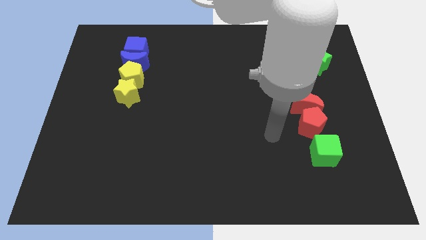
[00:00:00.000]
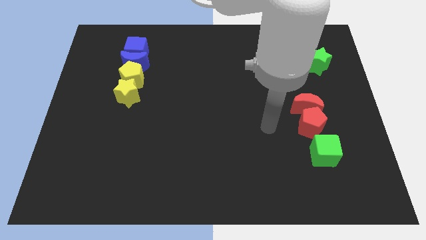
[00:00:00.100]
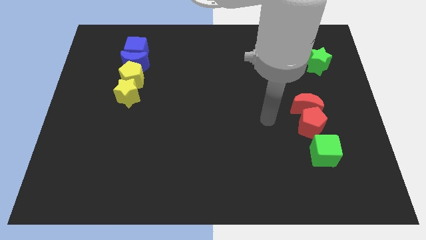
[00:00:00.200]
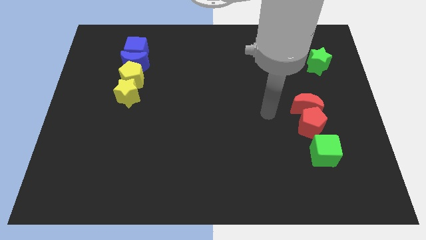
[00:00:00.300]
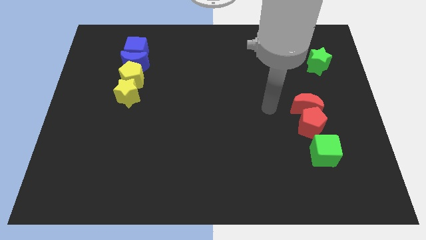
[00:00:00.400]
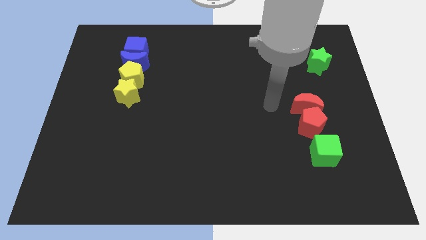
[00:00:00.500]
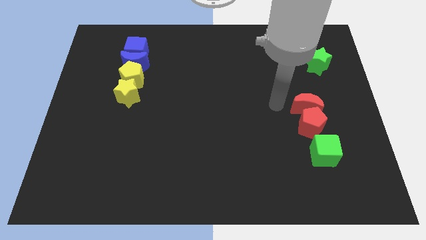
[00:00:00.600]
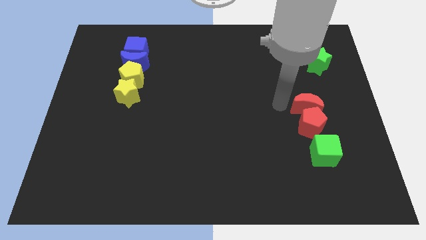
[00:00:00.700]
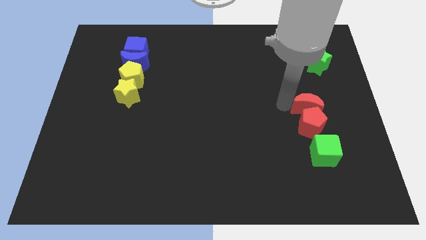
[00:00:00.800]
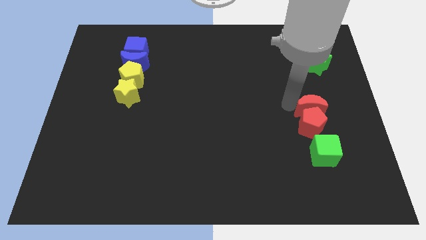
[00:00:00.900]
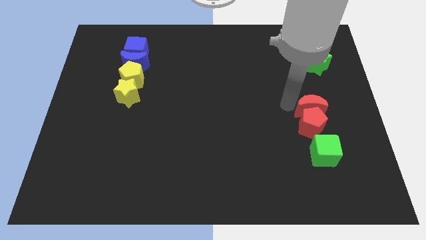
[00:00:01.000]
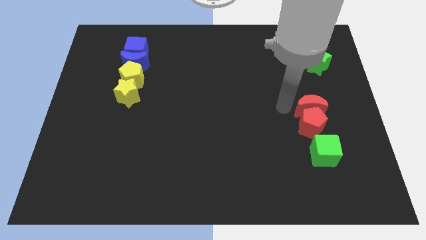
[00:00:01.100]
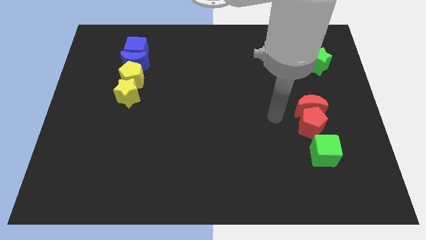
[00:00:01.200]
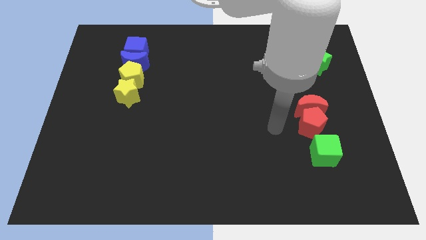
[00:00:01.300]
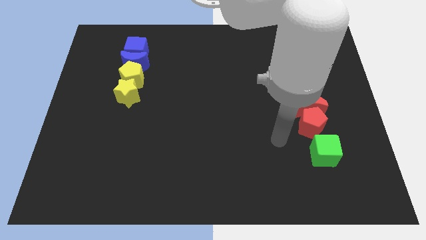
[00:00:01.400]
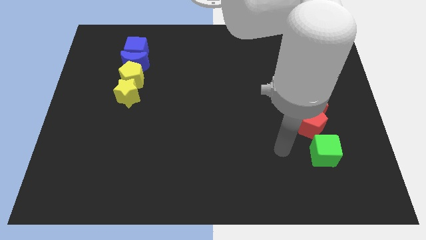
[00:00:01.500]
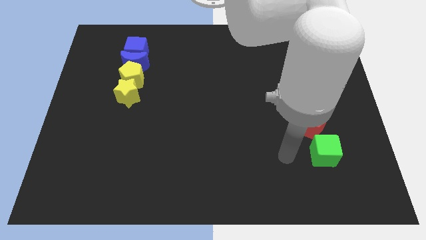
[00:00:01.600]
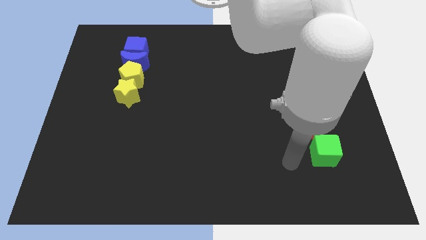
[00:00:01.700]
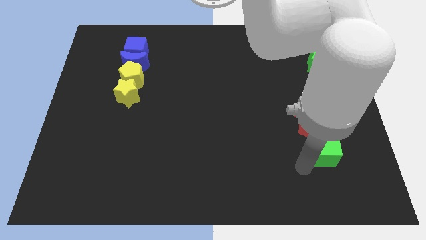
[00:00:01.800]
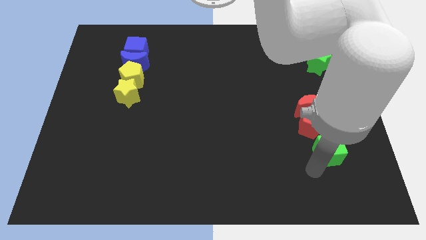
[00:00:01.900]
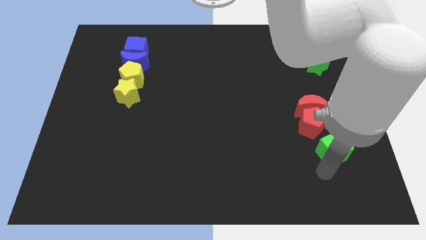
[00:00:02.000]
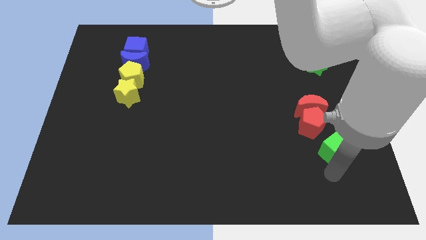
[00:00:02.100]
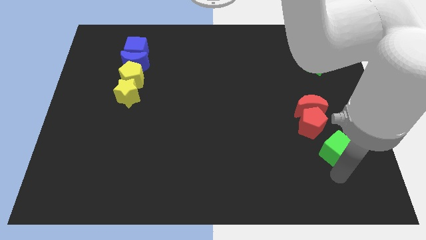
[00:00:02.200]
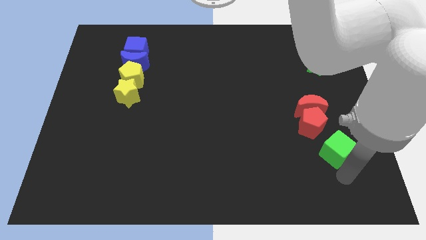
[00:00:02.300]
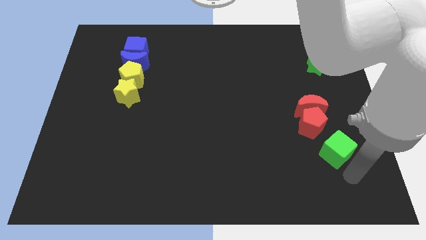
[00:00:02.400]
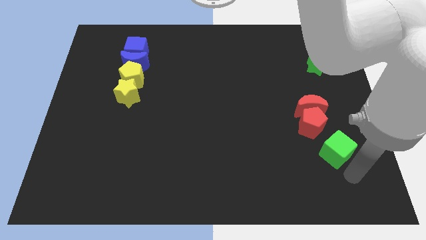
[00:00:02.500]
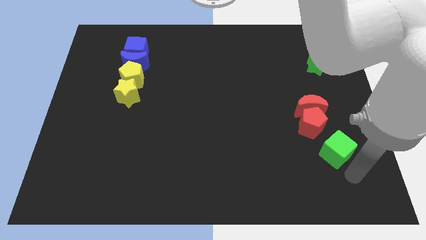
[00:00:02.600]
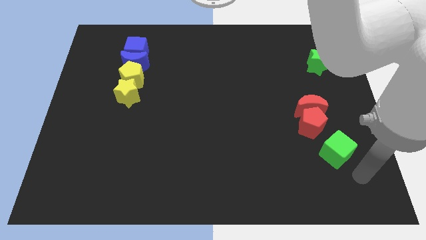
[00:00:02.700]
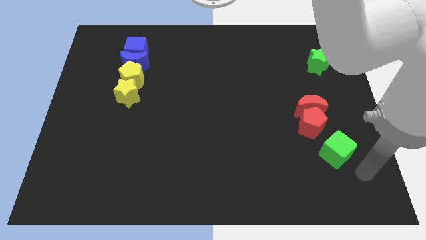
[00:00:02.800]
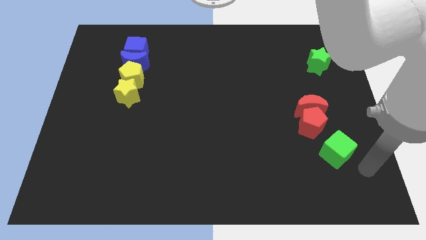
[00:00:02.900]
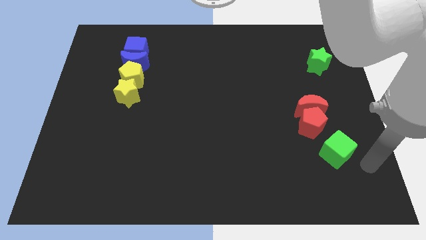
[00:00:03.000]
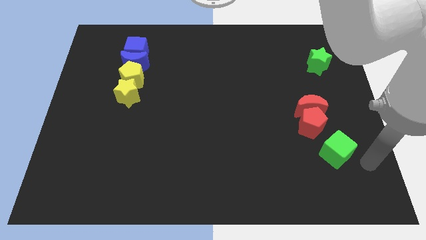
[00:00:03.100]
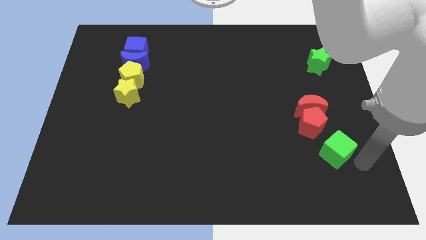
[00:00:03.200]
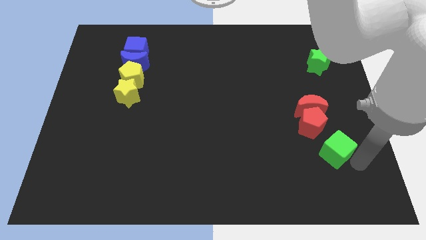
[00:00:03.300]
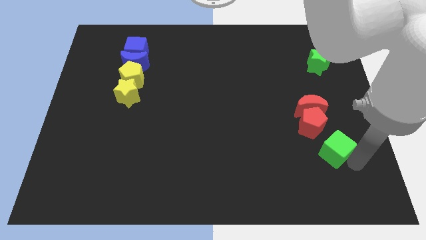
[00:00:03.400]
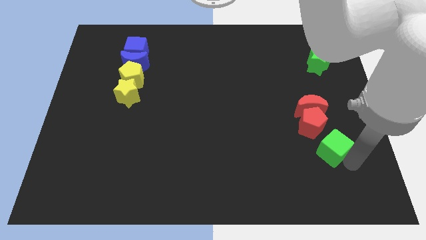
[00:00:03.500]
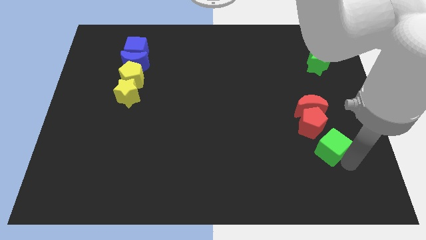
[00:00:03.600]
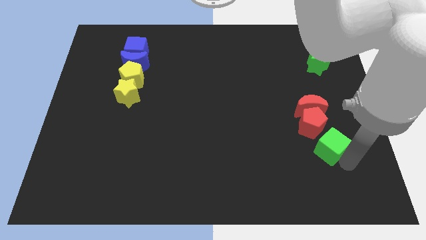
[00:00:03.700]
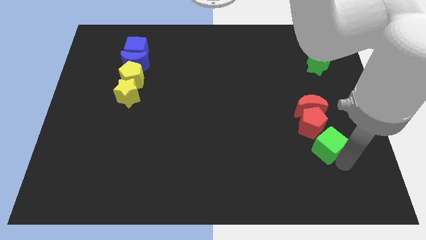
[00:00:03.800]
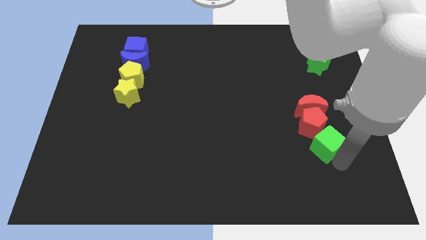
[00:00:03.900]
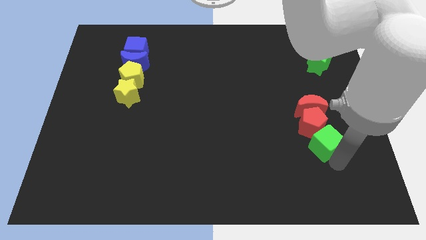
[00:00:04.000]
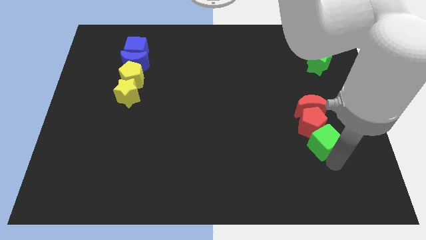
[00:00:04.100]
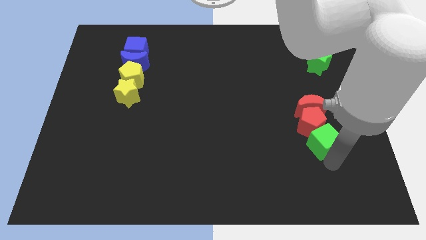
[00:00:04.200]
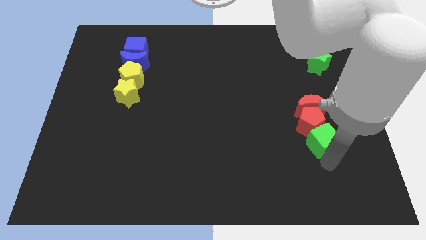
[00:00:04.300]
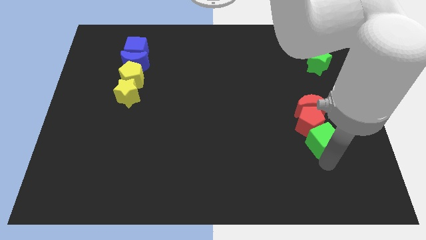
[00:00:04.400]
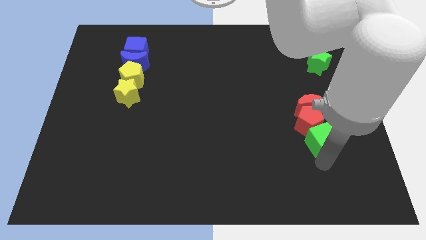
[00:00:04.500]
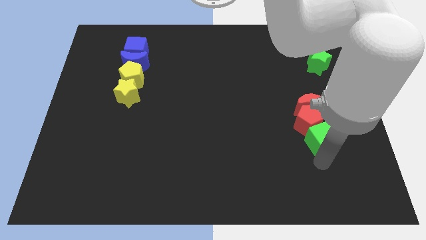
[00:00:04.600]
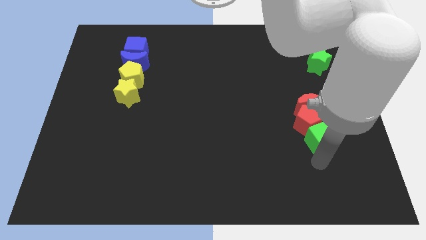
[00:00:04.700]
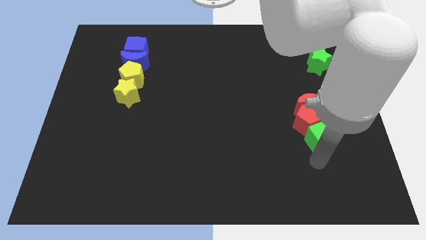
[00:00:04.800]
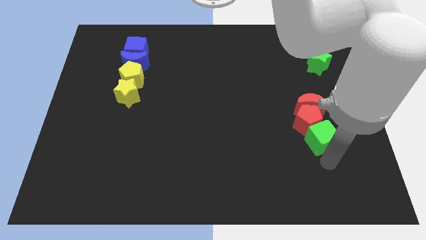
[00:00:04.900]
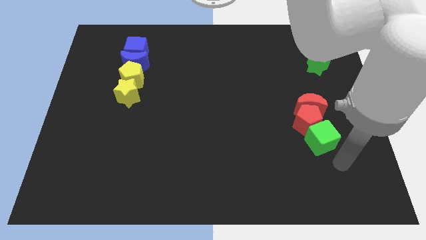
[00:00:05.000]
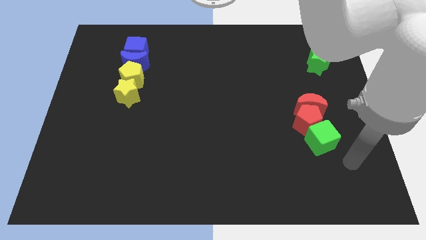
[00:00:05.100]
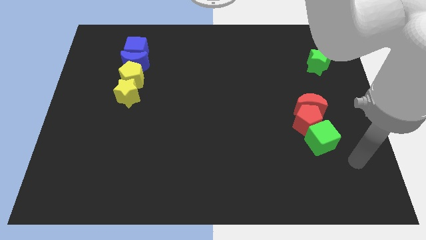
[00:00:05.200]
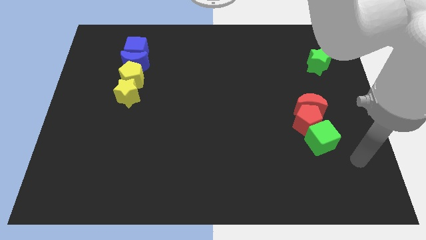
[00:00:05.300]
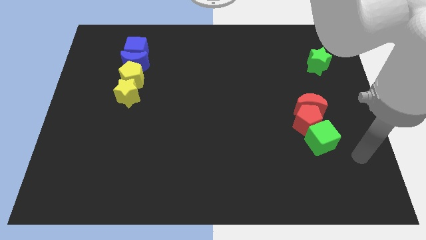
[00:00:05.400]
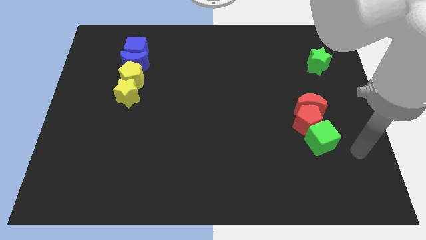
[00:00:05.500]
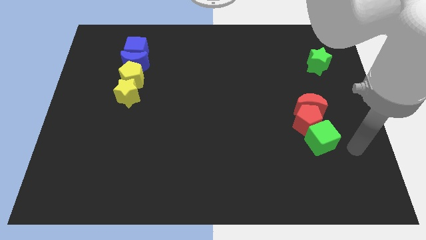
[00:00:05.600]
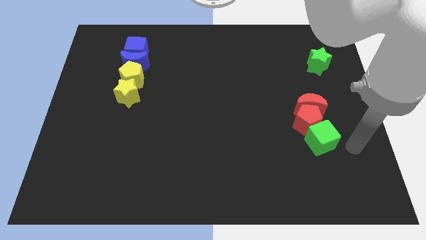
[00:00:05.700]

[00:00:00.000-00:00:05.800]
adjust the red blocks and the green cube at the right center

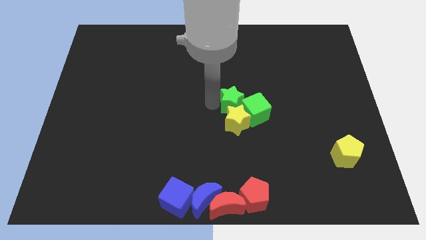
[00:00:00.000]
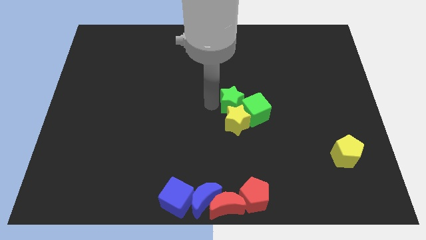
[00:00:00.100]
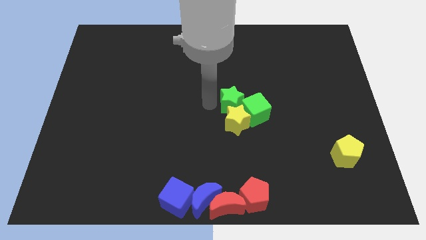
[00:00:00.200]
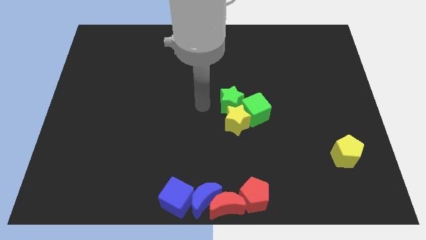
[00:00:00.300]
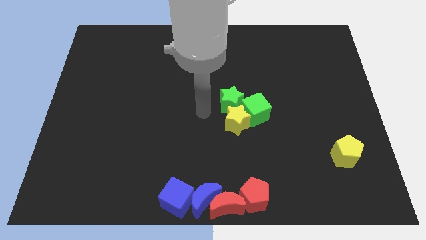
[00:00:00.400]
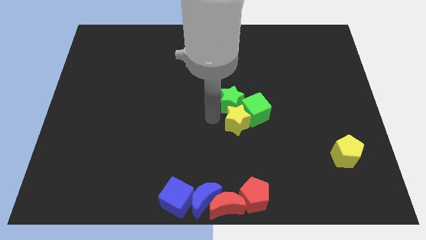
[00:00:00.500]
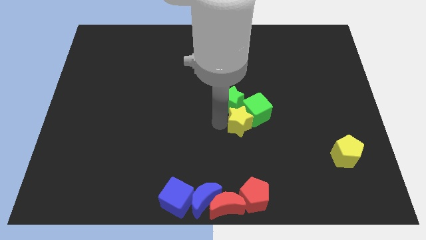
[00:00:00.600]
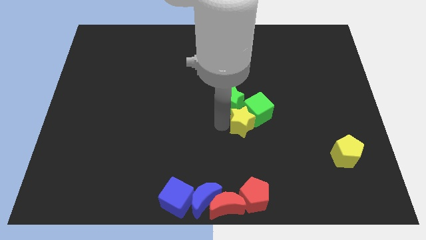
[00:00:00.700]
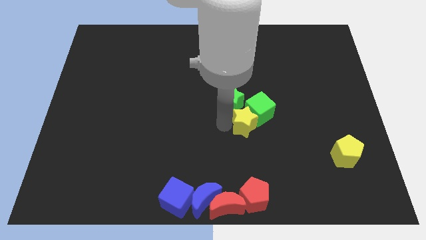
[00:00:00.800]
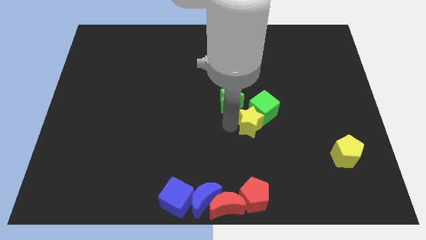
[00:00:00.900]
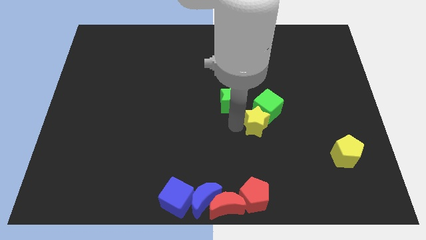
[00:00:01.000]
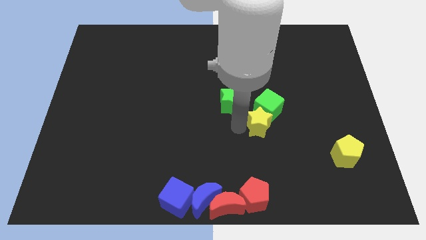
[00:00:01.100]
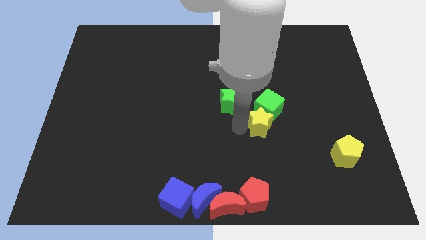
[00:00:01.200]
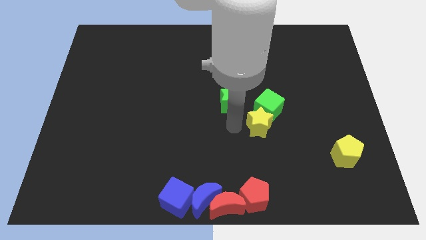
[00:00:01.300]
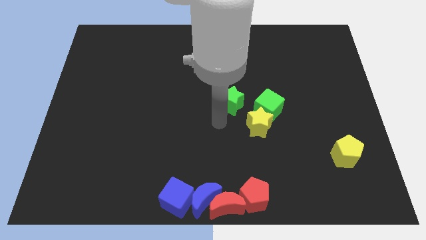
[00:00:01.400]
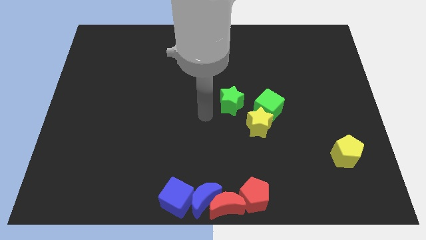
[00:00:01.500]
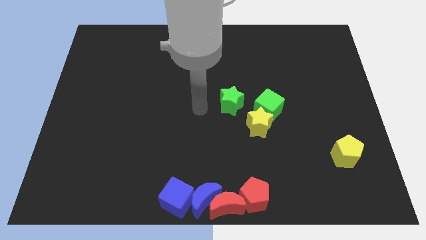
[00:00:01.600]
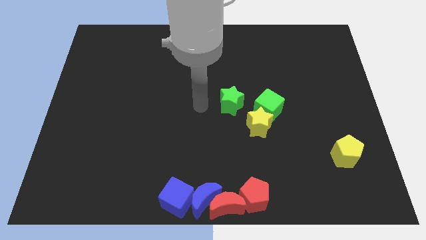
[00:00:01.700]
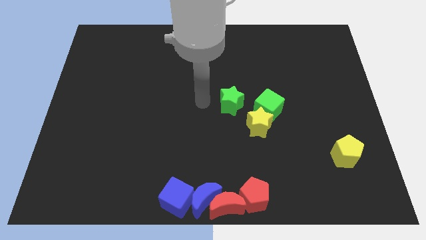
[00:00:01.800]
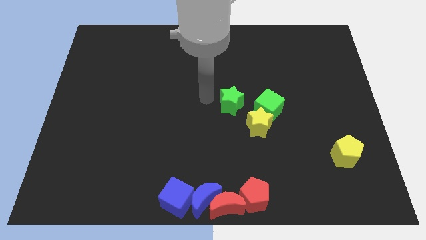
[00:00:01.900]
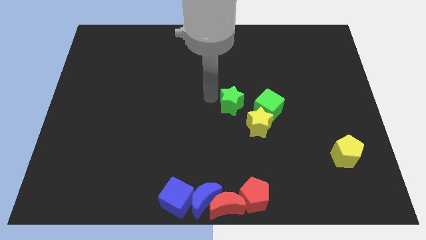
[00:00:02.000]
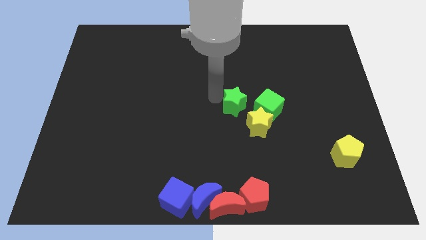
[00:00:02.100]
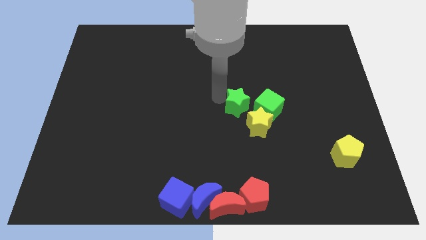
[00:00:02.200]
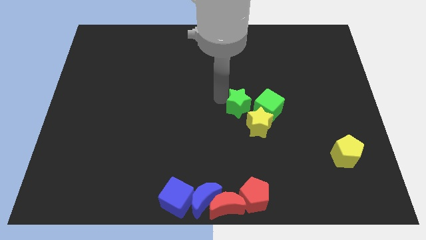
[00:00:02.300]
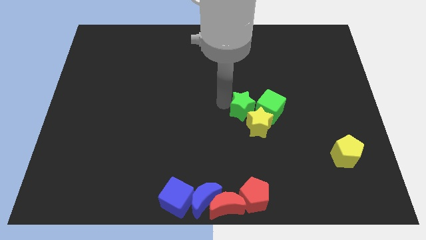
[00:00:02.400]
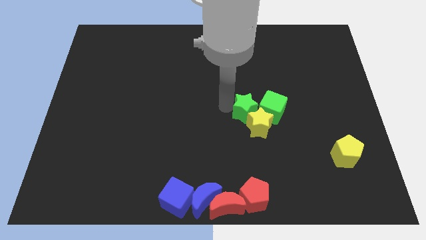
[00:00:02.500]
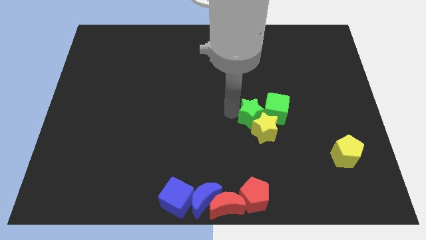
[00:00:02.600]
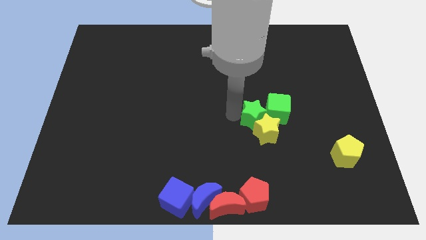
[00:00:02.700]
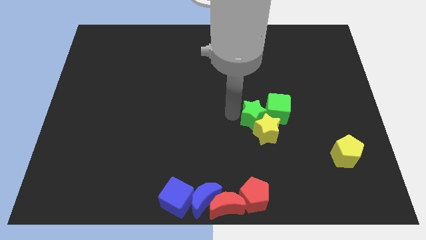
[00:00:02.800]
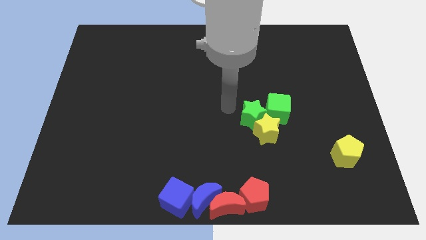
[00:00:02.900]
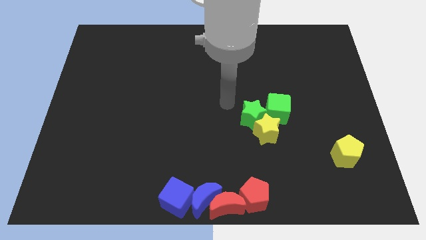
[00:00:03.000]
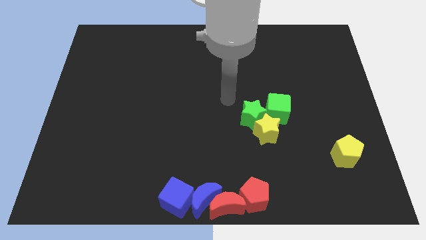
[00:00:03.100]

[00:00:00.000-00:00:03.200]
move the green star and yellow star towards the right of the board
